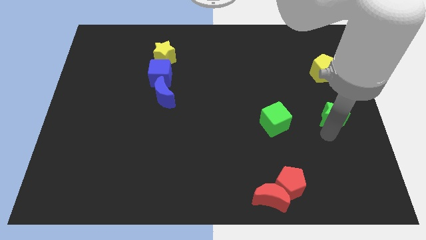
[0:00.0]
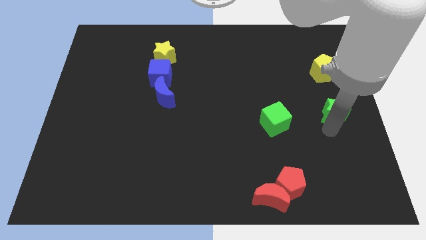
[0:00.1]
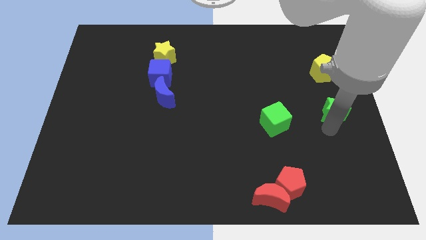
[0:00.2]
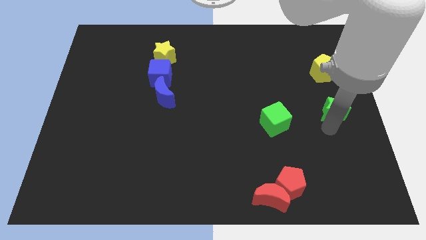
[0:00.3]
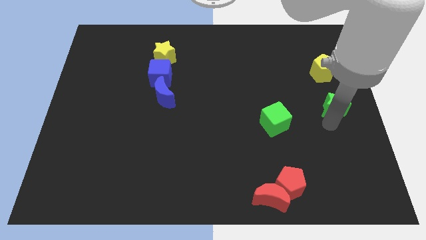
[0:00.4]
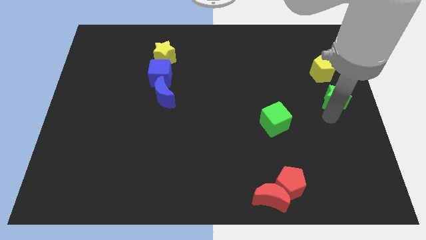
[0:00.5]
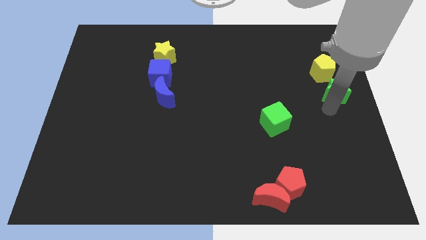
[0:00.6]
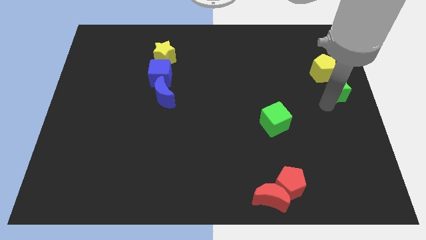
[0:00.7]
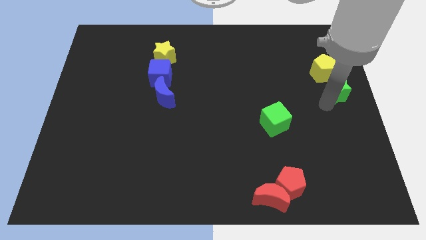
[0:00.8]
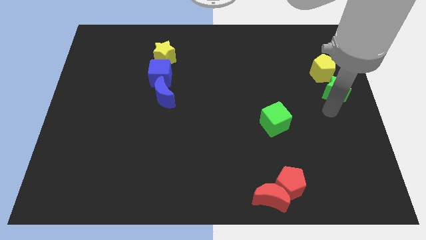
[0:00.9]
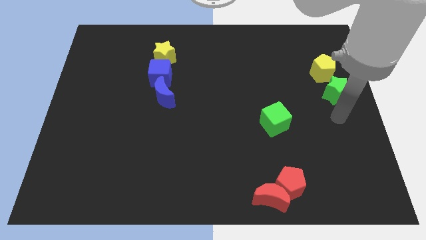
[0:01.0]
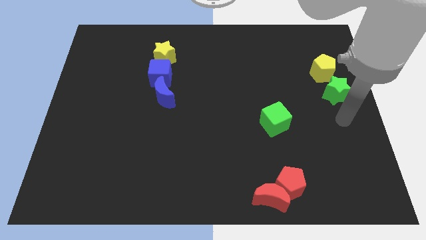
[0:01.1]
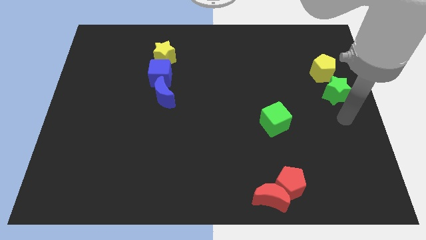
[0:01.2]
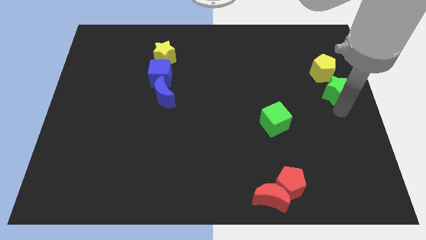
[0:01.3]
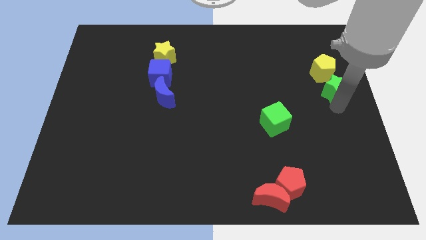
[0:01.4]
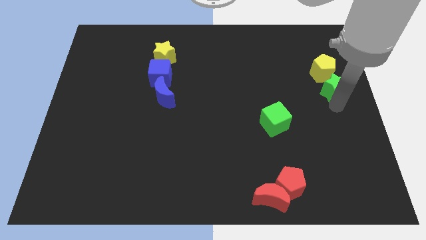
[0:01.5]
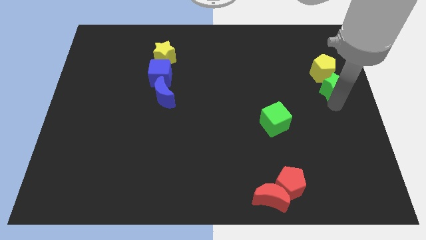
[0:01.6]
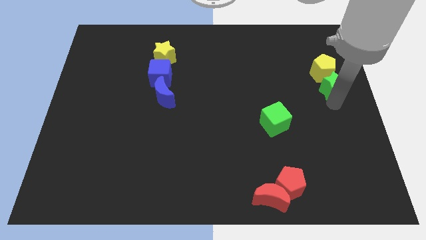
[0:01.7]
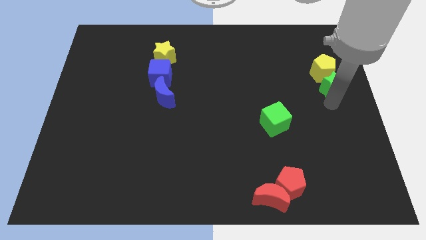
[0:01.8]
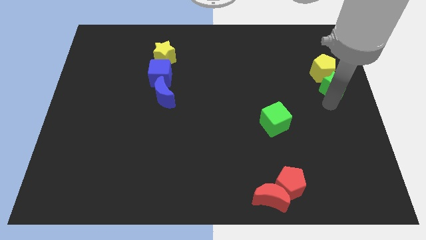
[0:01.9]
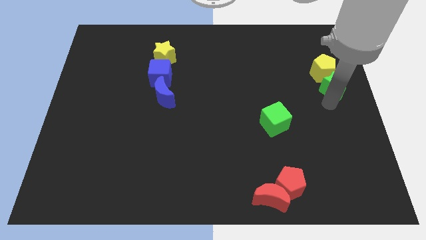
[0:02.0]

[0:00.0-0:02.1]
slide green star into yellow pentagon

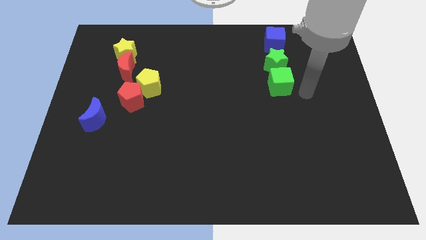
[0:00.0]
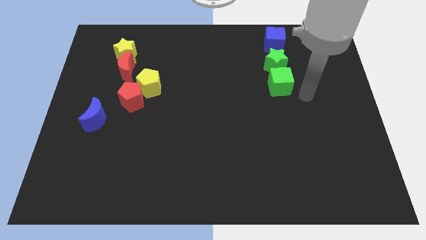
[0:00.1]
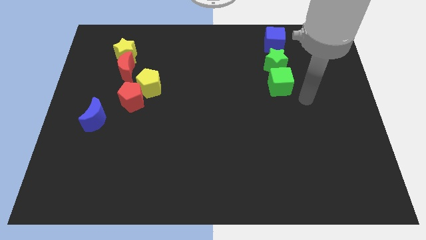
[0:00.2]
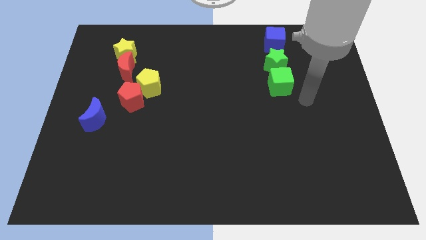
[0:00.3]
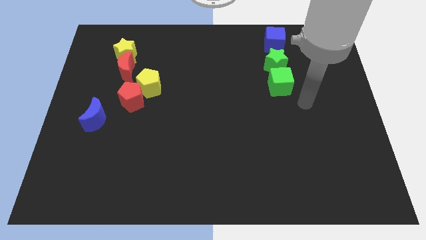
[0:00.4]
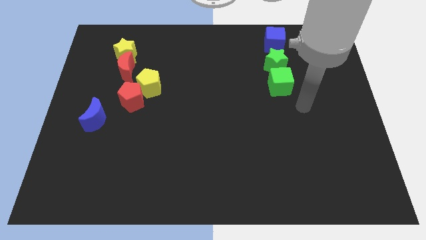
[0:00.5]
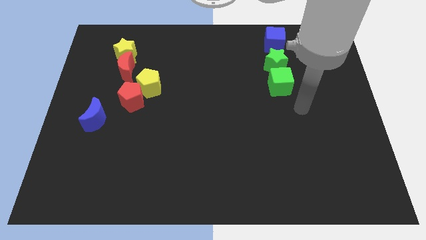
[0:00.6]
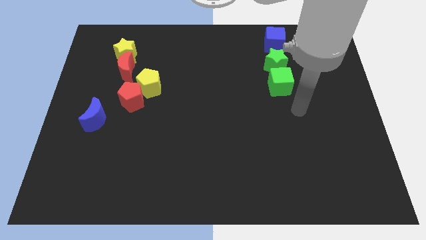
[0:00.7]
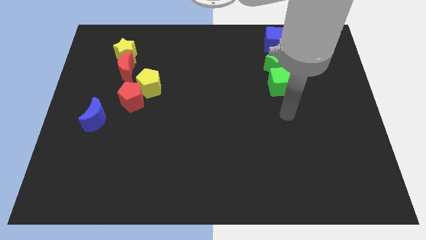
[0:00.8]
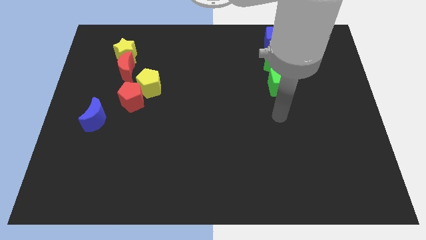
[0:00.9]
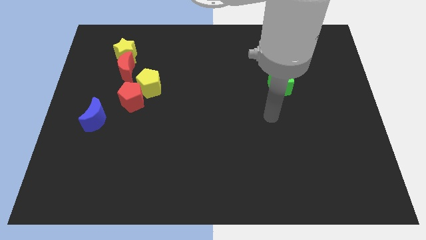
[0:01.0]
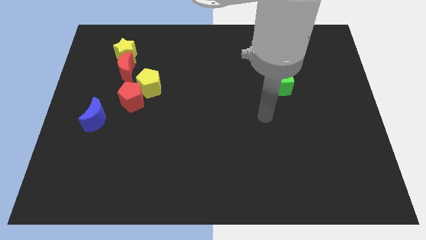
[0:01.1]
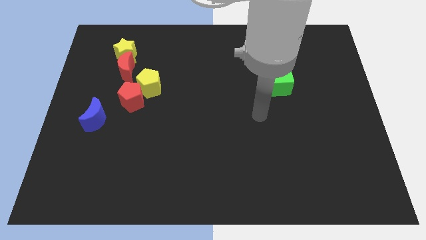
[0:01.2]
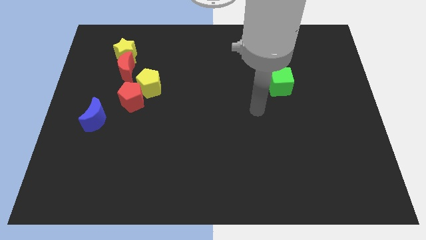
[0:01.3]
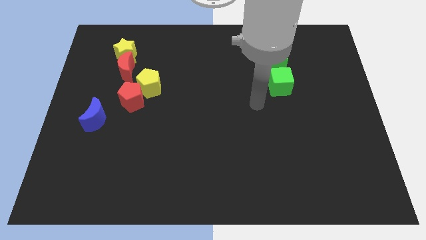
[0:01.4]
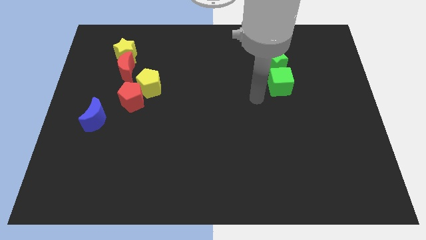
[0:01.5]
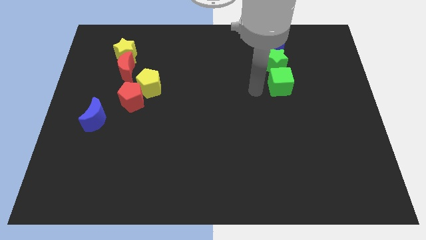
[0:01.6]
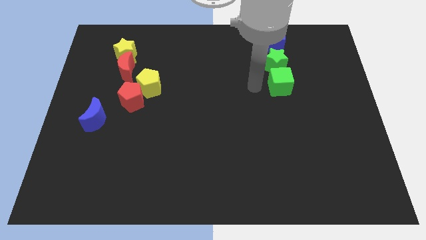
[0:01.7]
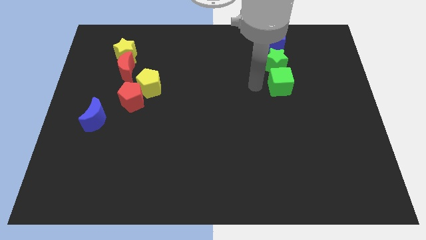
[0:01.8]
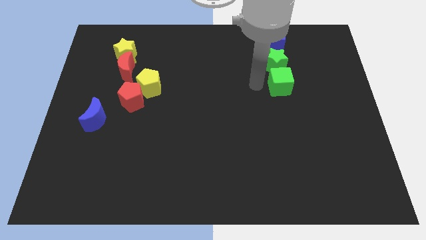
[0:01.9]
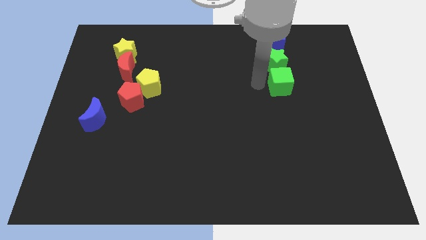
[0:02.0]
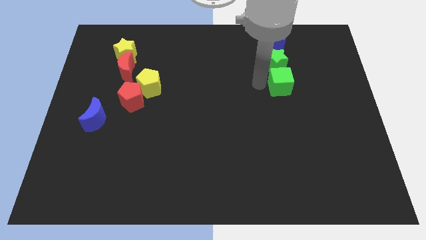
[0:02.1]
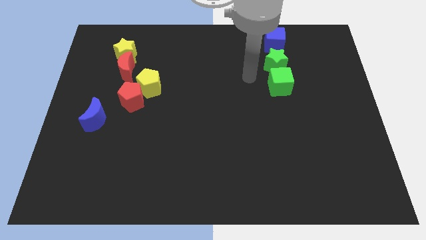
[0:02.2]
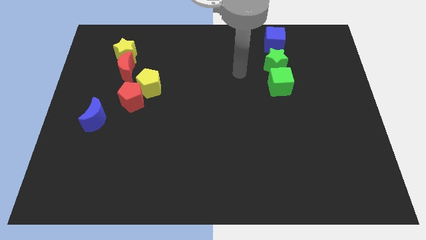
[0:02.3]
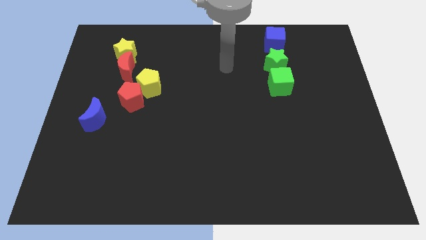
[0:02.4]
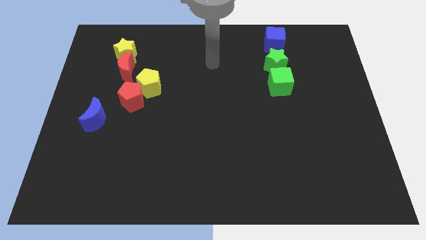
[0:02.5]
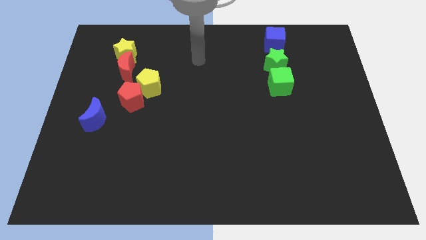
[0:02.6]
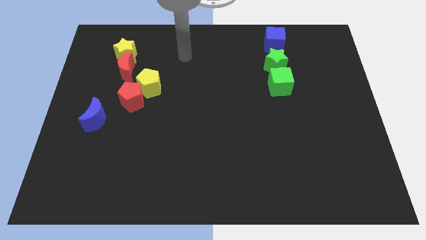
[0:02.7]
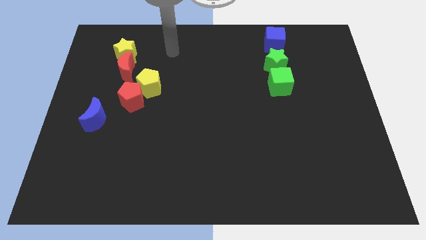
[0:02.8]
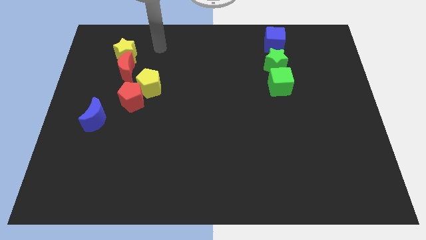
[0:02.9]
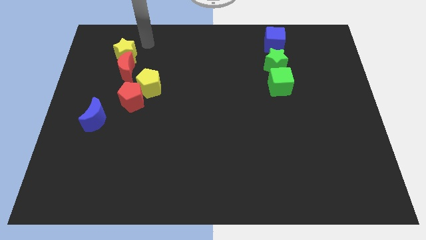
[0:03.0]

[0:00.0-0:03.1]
move your arm away from green cube

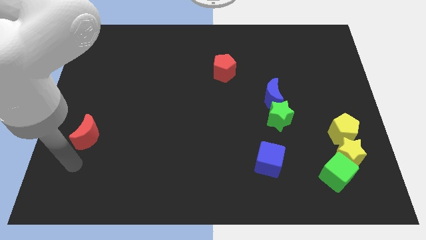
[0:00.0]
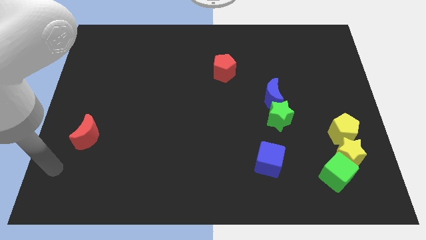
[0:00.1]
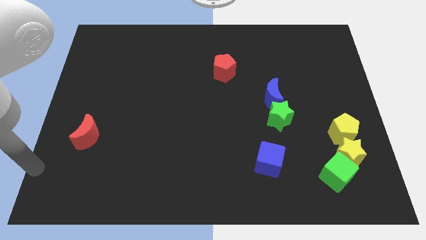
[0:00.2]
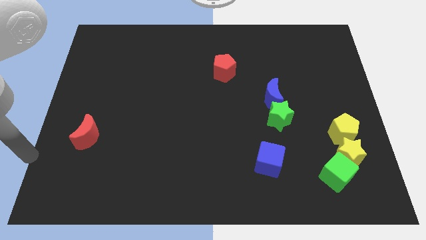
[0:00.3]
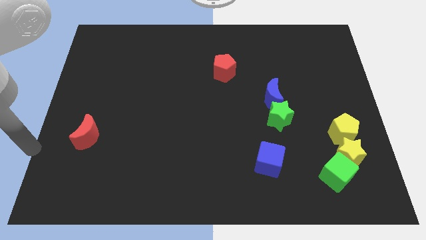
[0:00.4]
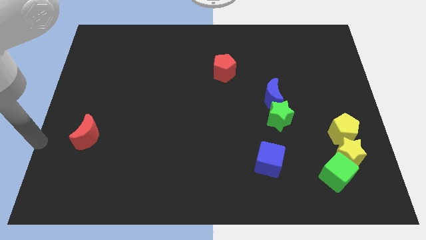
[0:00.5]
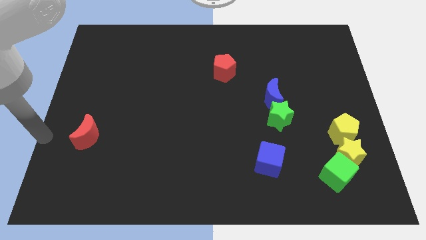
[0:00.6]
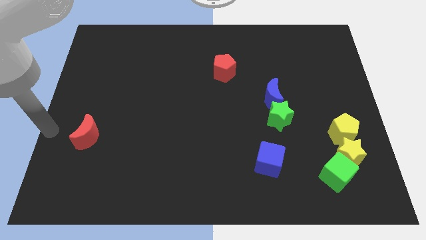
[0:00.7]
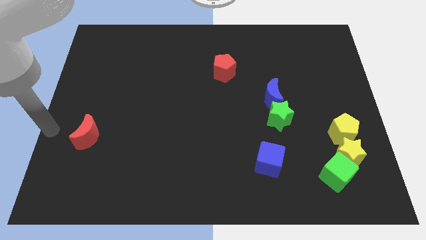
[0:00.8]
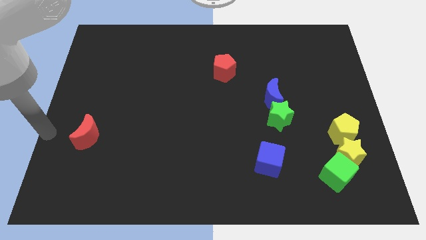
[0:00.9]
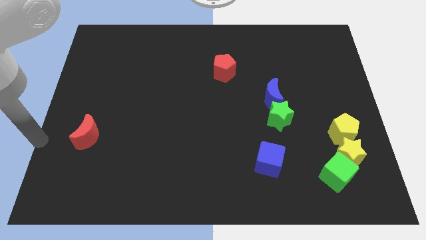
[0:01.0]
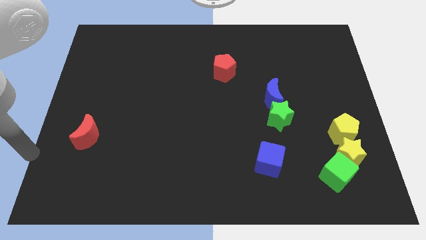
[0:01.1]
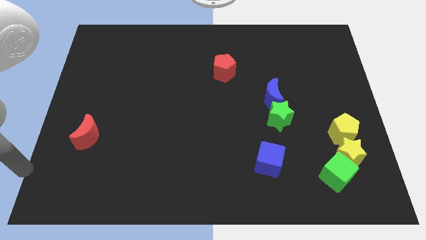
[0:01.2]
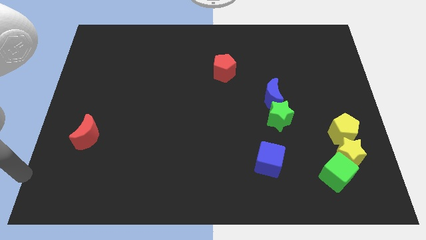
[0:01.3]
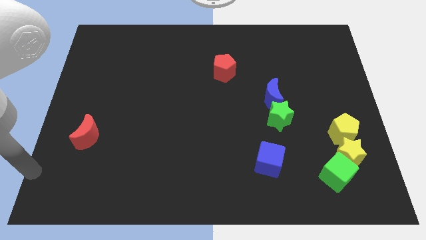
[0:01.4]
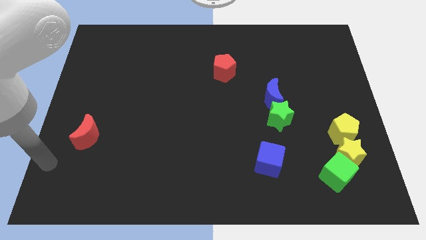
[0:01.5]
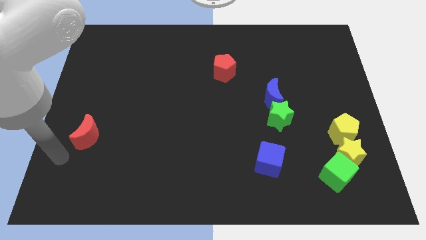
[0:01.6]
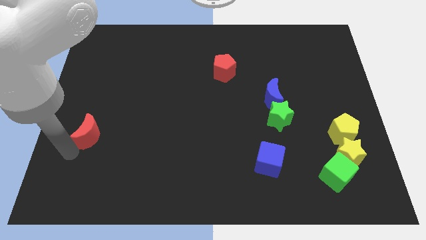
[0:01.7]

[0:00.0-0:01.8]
move your arm at the bottom of the red moon

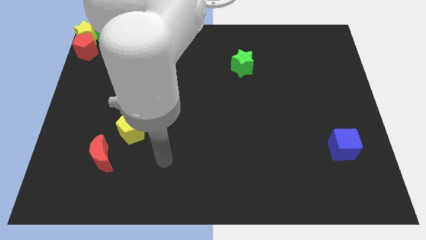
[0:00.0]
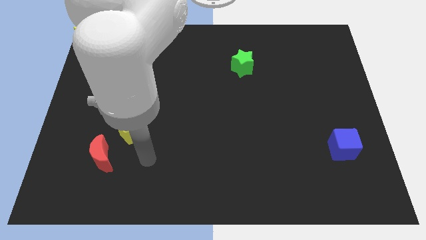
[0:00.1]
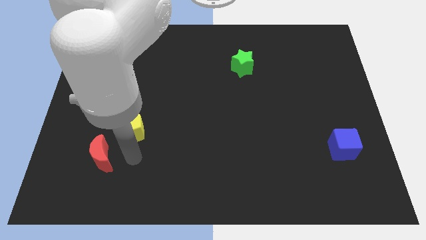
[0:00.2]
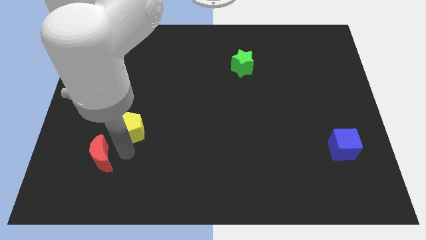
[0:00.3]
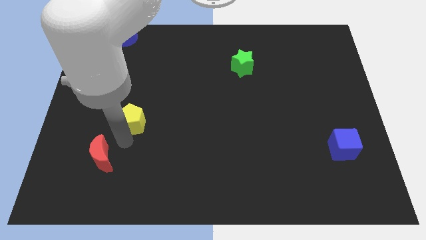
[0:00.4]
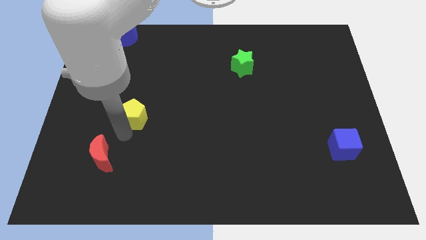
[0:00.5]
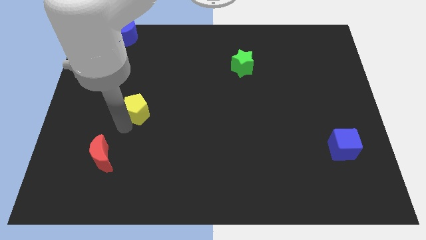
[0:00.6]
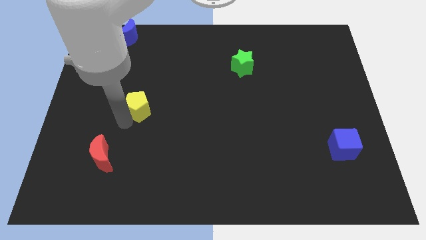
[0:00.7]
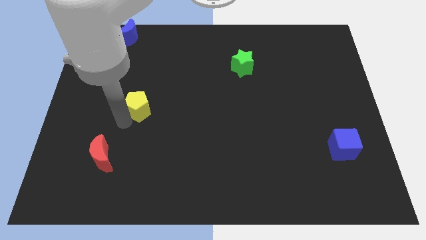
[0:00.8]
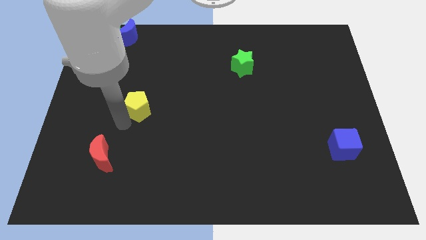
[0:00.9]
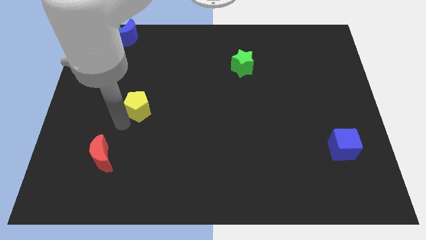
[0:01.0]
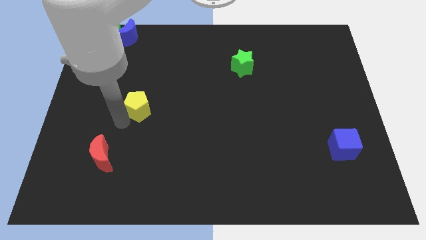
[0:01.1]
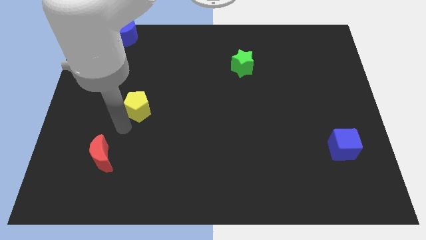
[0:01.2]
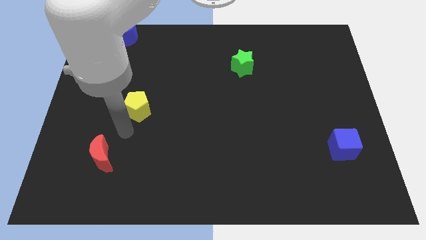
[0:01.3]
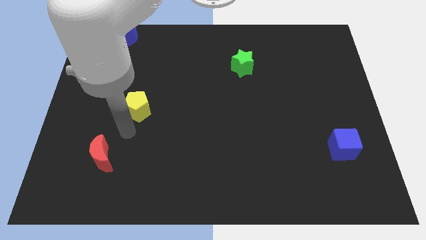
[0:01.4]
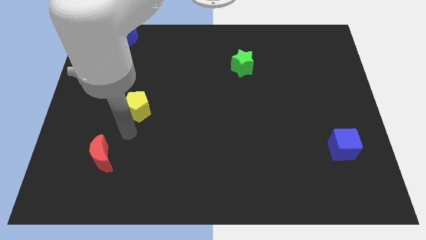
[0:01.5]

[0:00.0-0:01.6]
push the yellow pentagon slightly to the top side of the board

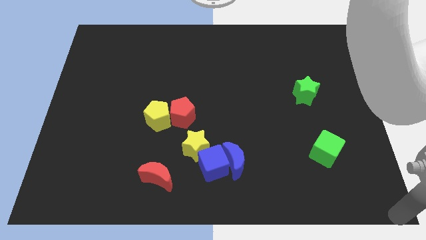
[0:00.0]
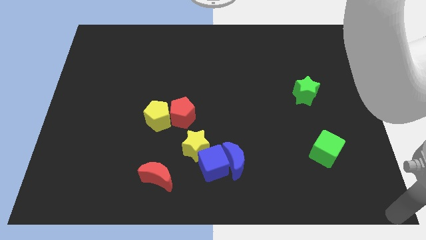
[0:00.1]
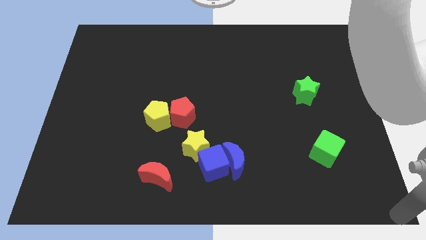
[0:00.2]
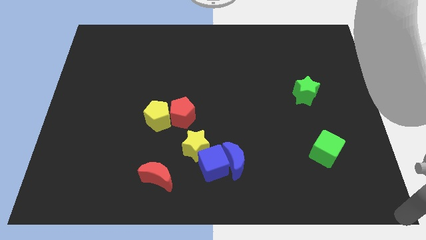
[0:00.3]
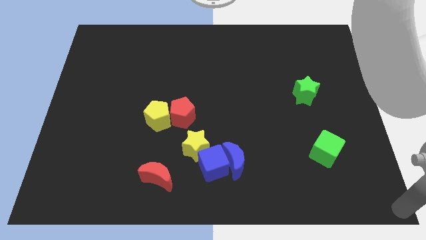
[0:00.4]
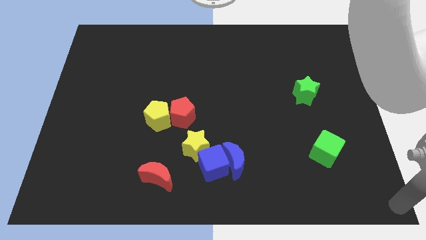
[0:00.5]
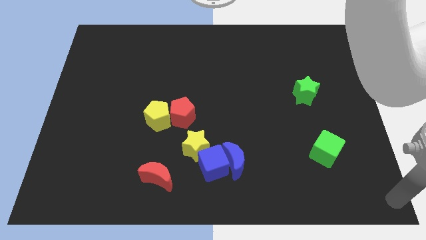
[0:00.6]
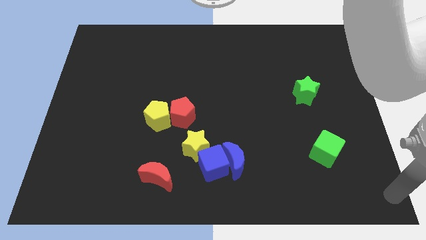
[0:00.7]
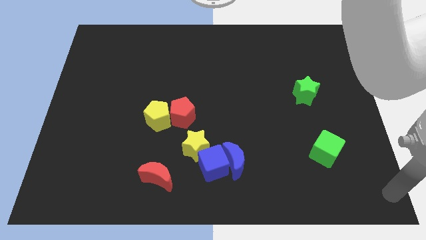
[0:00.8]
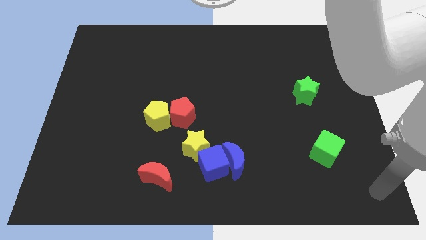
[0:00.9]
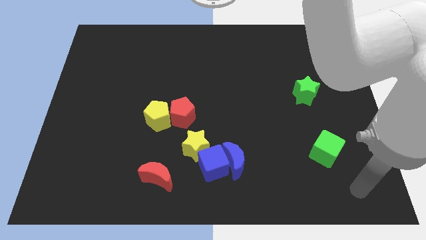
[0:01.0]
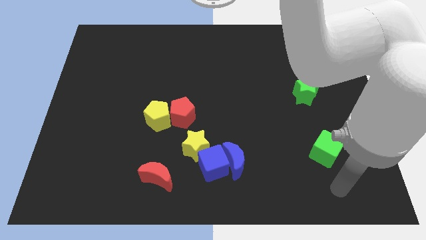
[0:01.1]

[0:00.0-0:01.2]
place your arm at the bottom of the green cube
